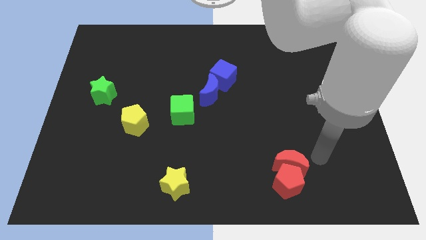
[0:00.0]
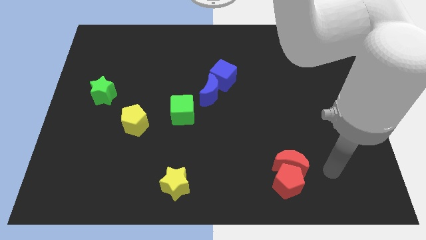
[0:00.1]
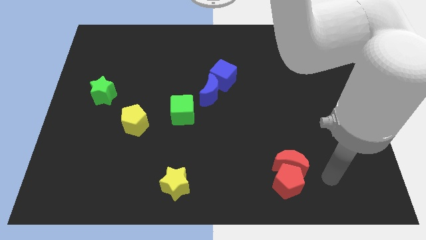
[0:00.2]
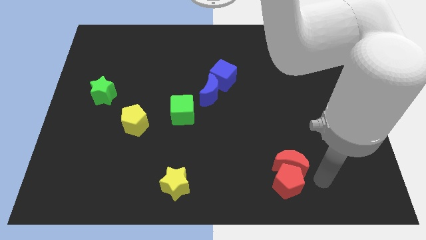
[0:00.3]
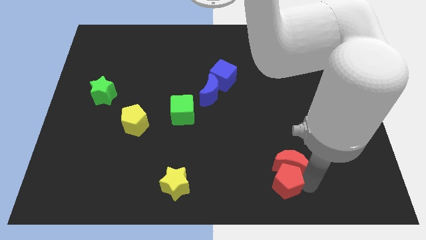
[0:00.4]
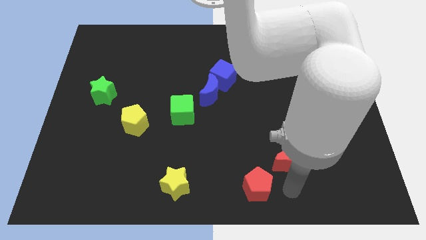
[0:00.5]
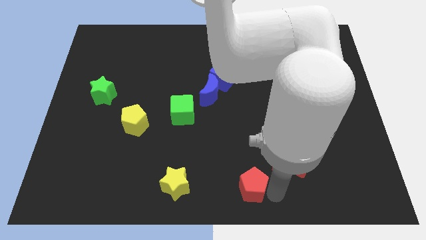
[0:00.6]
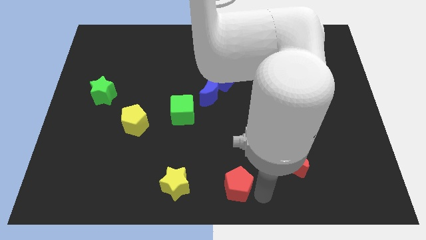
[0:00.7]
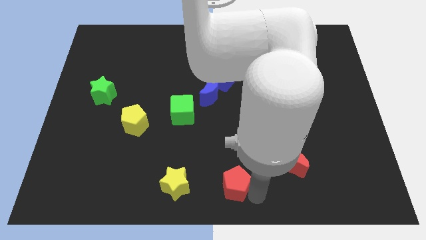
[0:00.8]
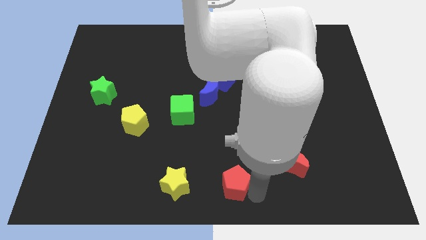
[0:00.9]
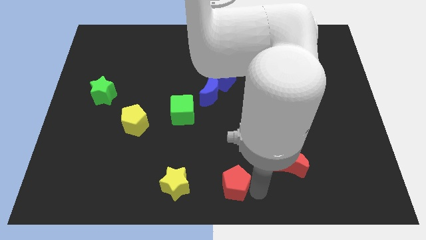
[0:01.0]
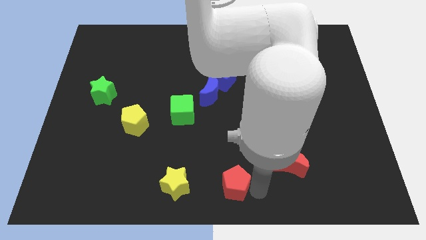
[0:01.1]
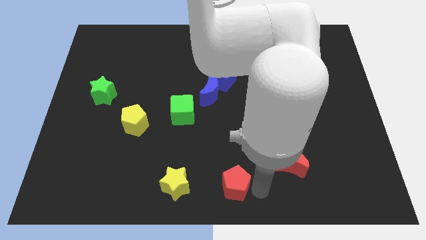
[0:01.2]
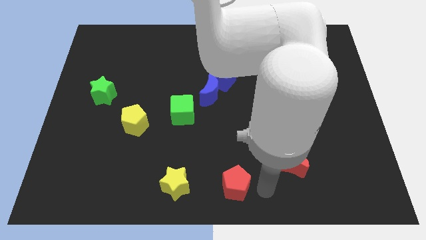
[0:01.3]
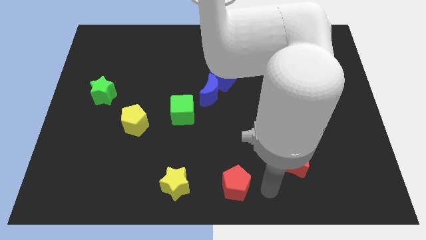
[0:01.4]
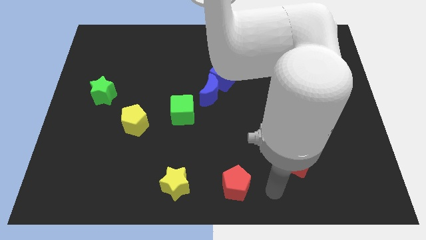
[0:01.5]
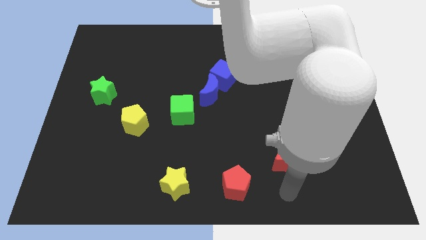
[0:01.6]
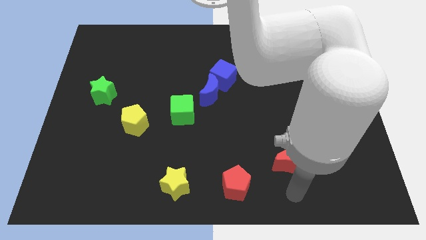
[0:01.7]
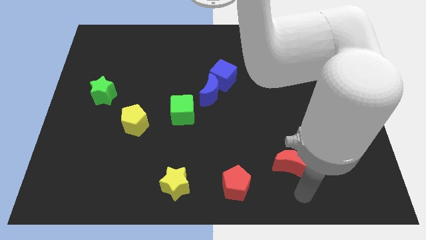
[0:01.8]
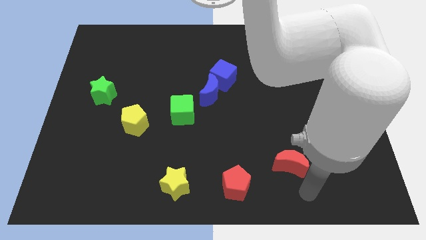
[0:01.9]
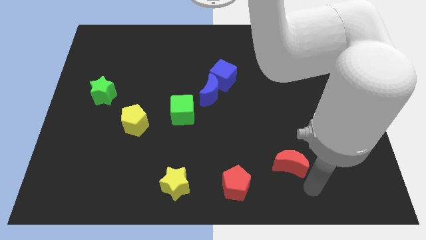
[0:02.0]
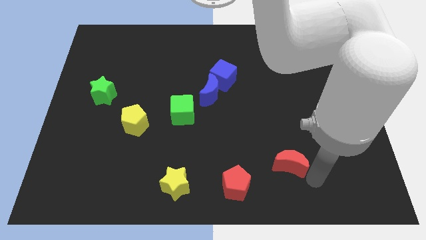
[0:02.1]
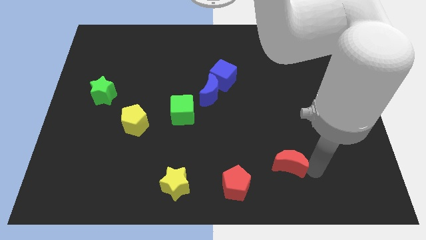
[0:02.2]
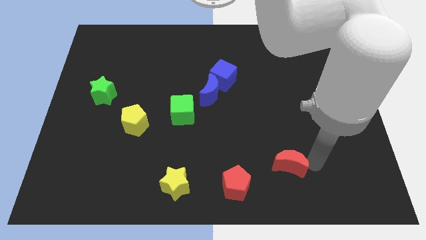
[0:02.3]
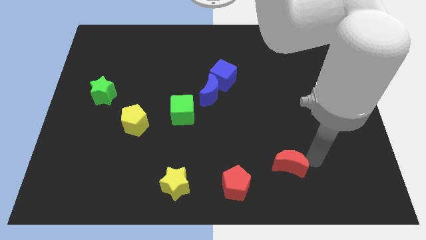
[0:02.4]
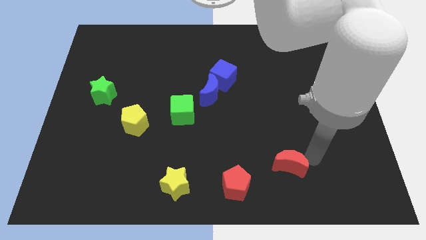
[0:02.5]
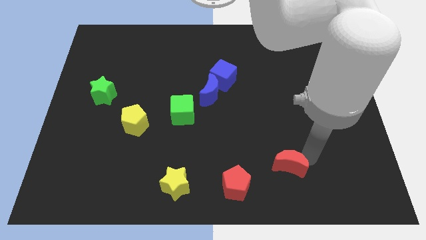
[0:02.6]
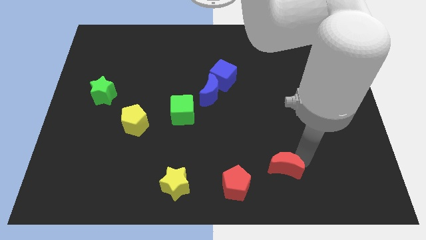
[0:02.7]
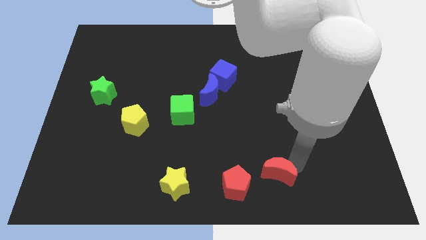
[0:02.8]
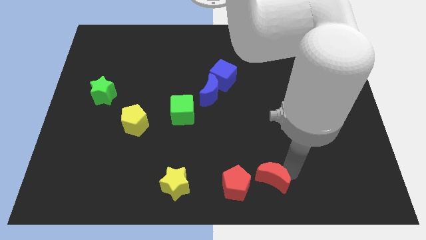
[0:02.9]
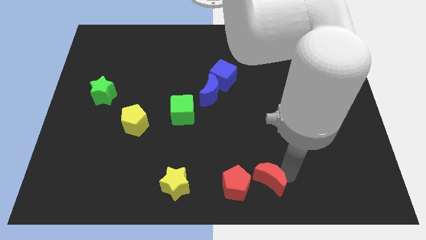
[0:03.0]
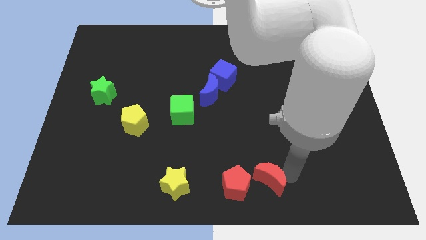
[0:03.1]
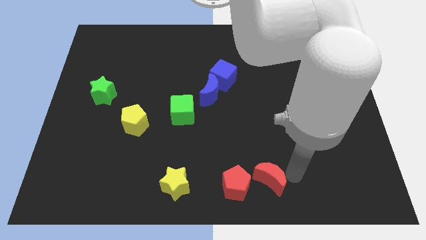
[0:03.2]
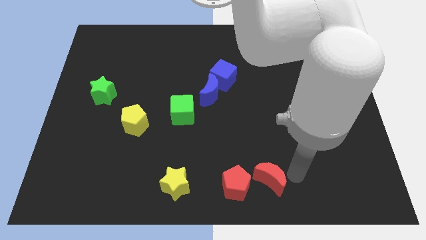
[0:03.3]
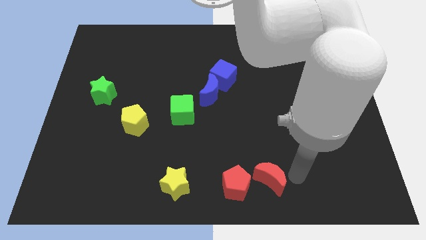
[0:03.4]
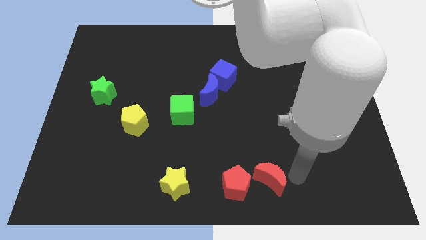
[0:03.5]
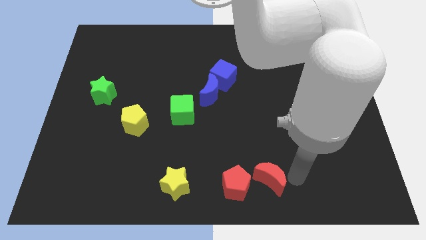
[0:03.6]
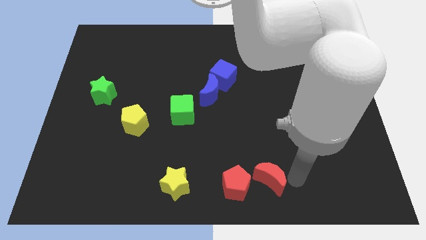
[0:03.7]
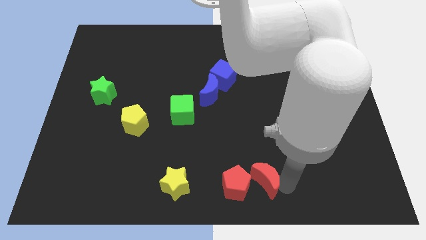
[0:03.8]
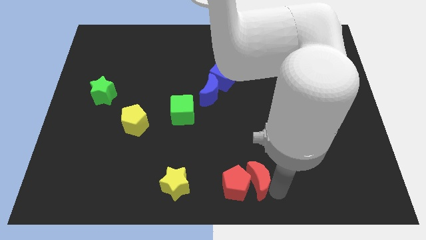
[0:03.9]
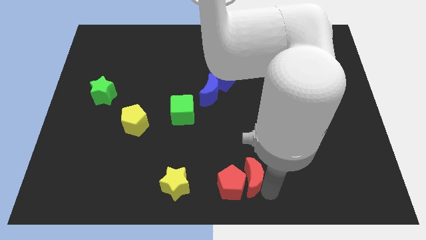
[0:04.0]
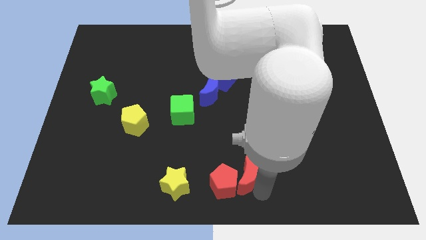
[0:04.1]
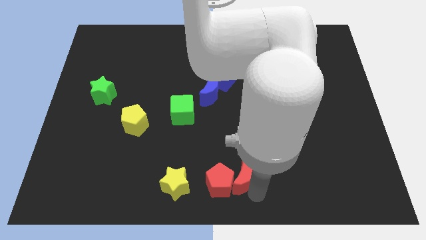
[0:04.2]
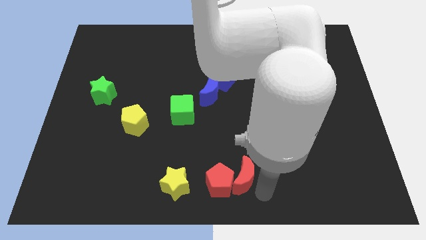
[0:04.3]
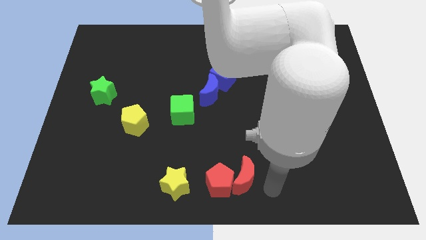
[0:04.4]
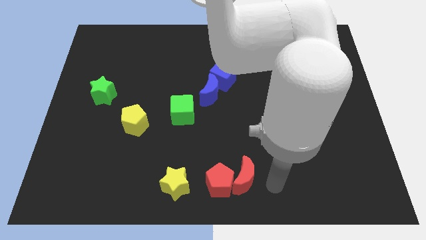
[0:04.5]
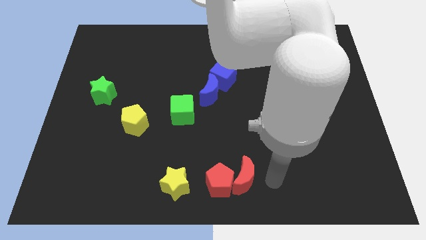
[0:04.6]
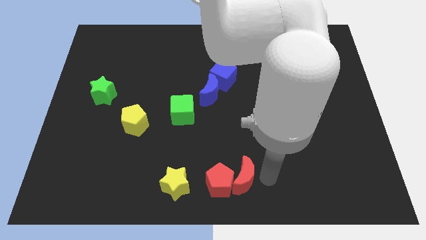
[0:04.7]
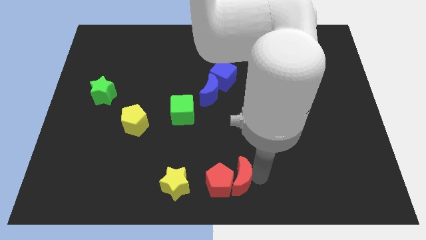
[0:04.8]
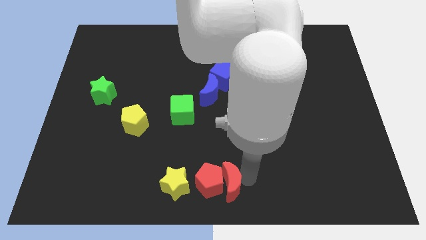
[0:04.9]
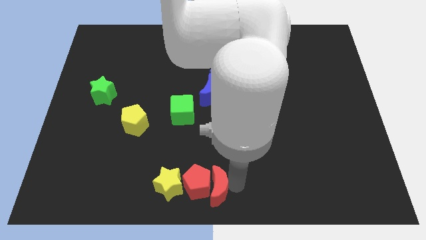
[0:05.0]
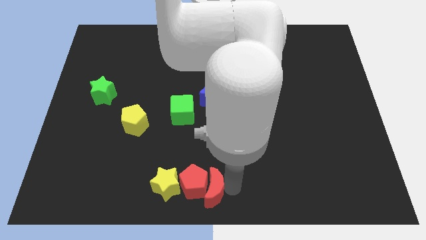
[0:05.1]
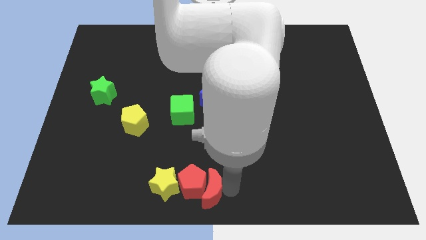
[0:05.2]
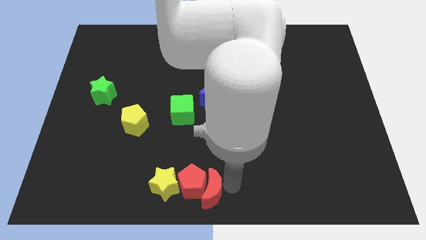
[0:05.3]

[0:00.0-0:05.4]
move the red moon and pentagon and yellow star slightly to left

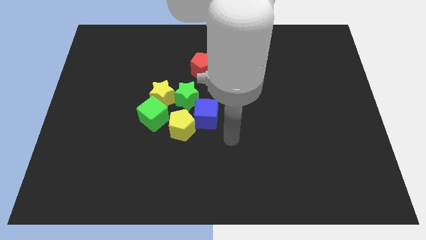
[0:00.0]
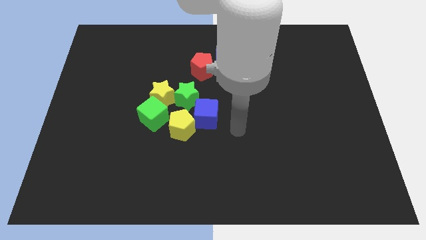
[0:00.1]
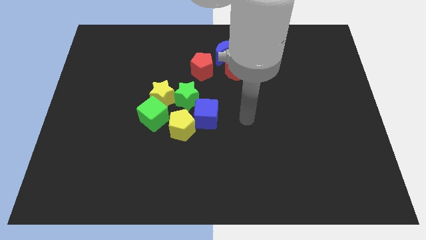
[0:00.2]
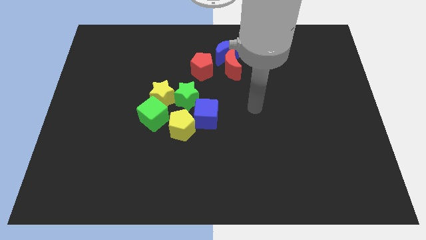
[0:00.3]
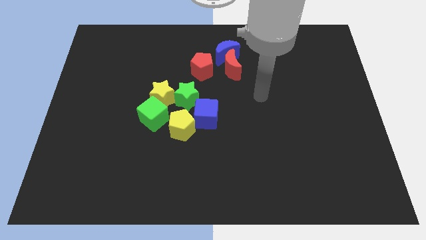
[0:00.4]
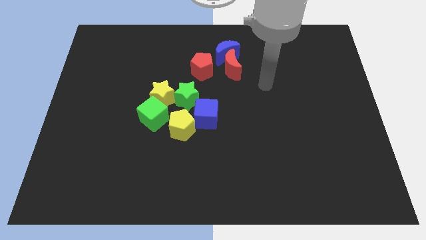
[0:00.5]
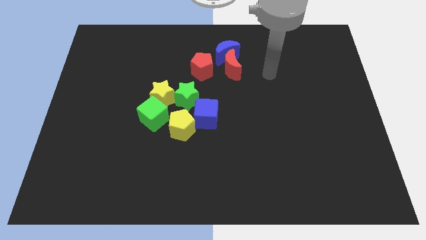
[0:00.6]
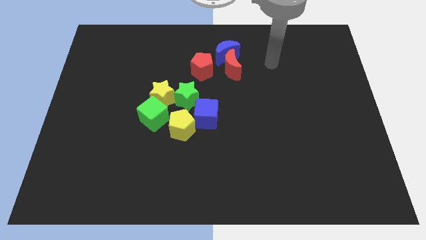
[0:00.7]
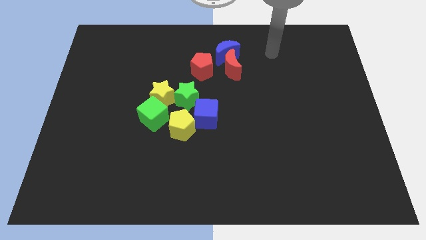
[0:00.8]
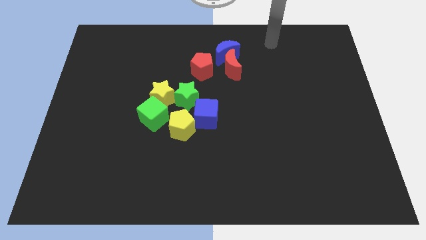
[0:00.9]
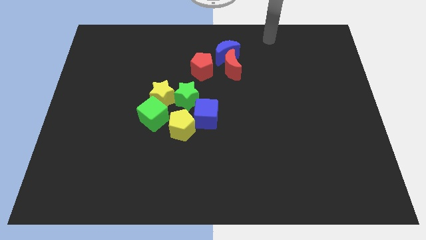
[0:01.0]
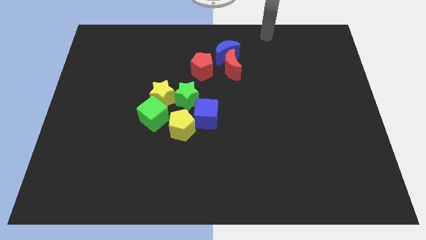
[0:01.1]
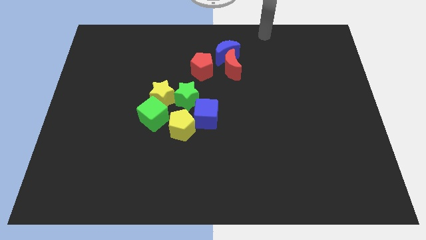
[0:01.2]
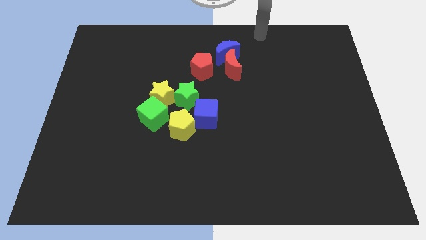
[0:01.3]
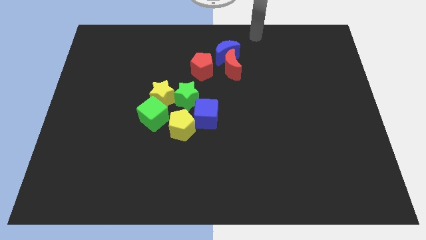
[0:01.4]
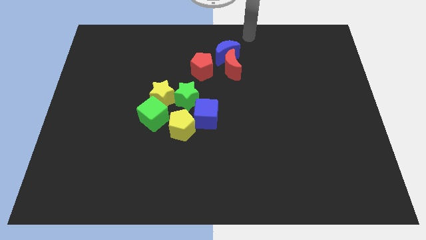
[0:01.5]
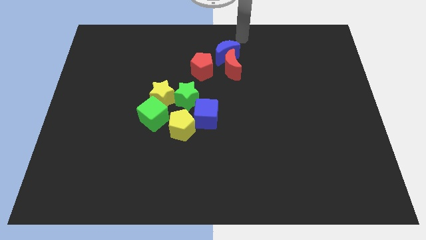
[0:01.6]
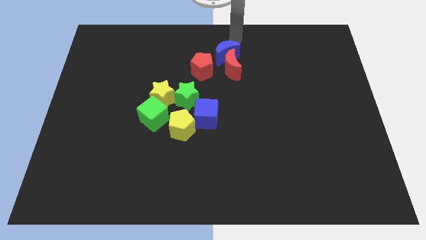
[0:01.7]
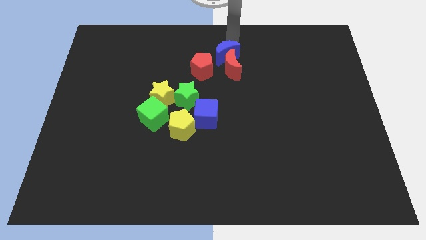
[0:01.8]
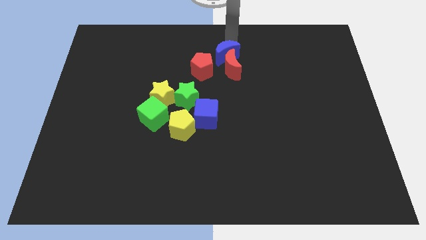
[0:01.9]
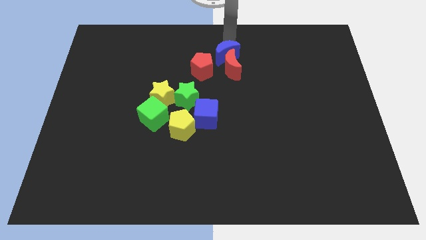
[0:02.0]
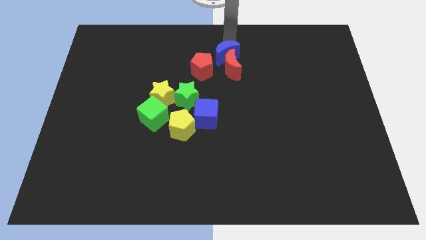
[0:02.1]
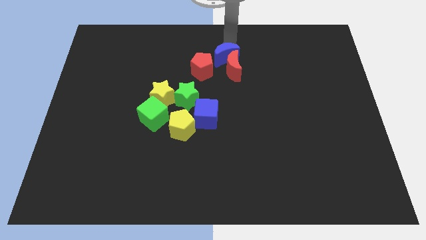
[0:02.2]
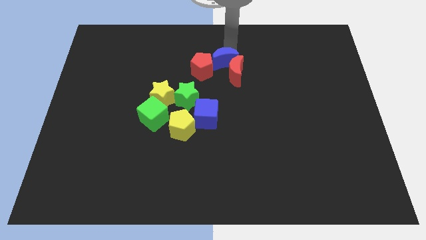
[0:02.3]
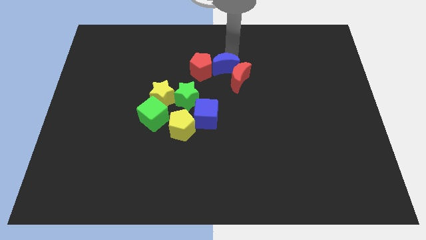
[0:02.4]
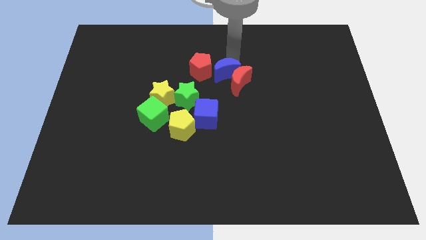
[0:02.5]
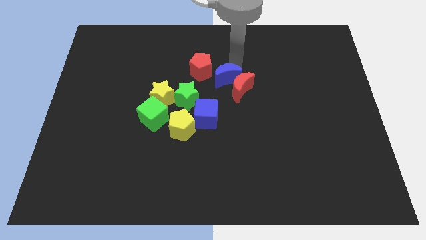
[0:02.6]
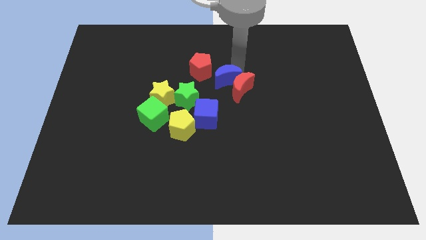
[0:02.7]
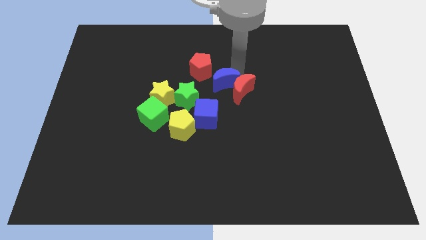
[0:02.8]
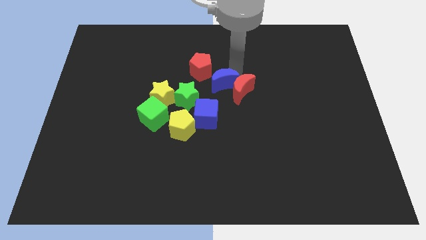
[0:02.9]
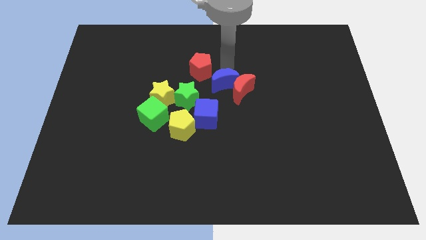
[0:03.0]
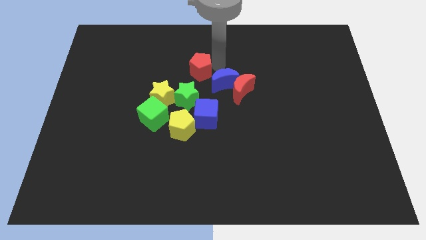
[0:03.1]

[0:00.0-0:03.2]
push the group of crescents slightly downwards

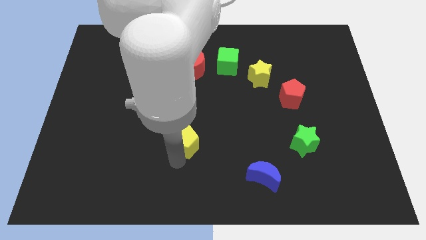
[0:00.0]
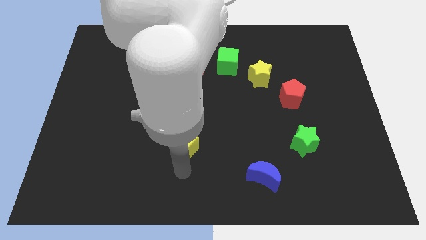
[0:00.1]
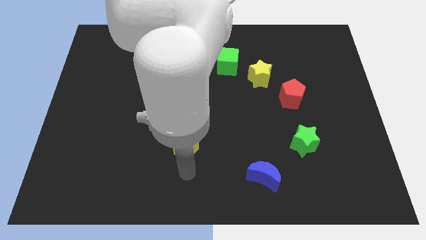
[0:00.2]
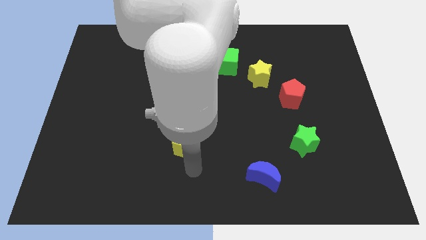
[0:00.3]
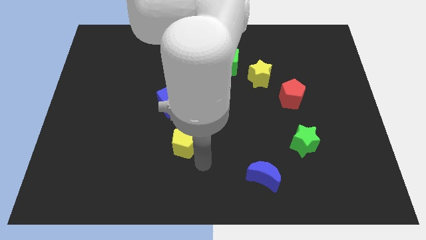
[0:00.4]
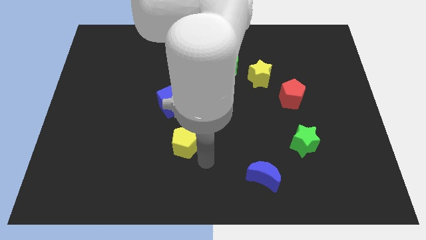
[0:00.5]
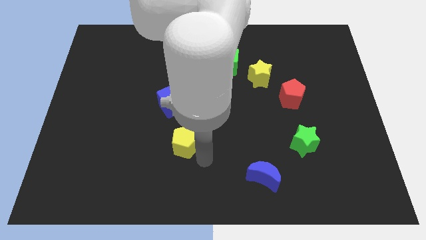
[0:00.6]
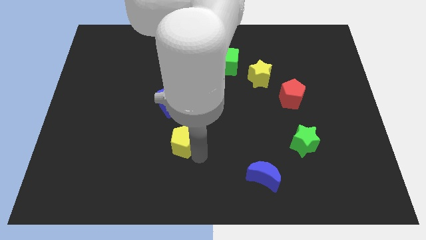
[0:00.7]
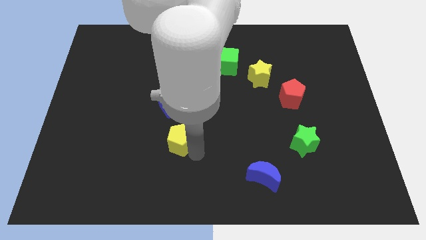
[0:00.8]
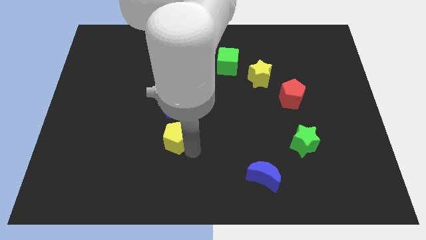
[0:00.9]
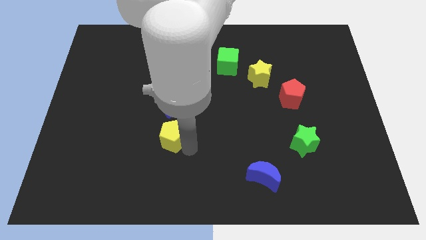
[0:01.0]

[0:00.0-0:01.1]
place the yellow pentagon vertically below the blue cube
